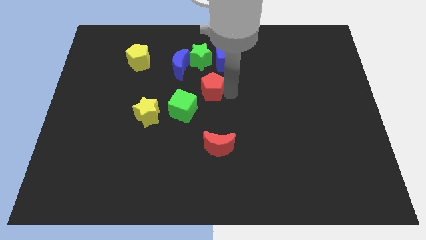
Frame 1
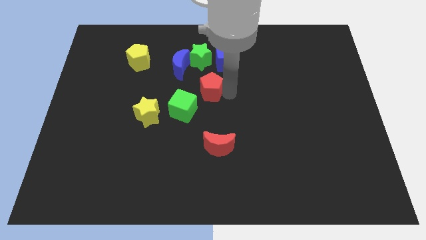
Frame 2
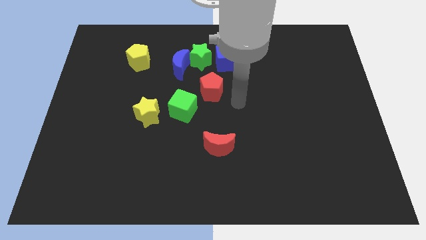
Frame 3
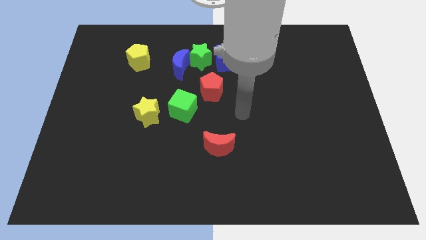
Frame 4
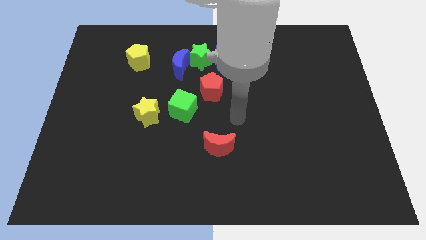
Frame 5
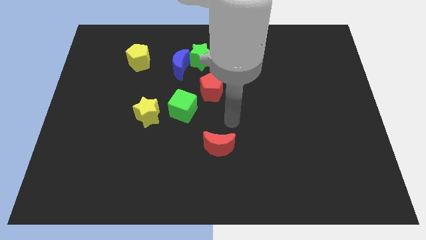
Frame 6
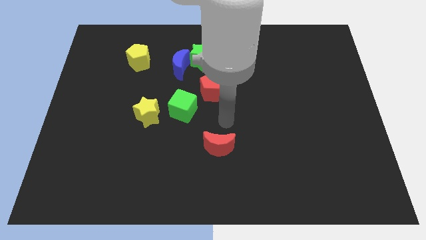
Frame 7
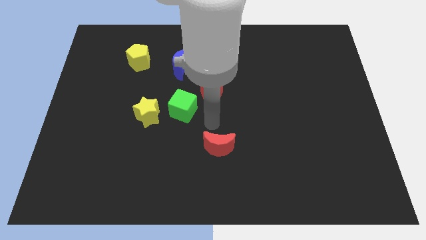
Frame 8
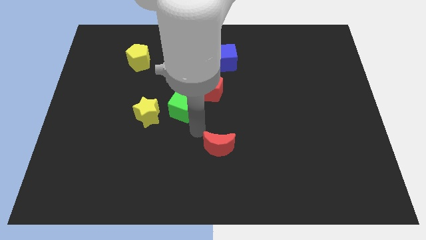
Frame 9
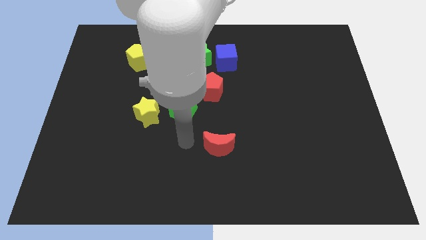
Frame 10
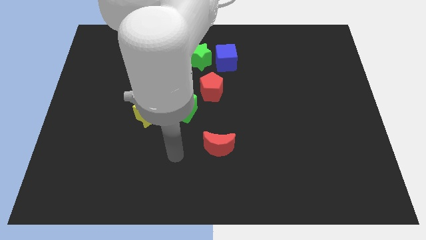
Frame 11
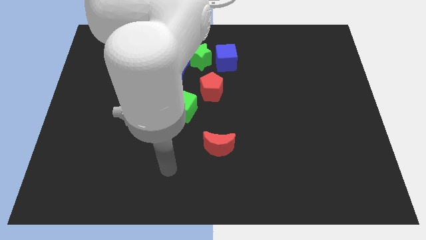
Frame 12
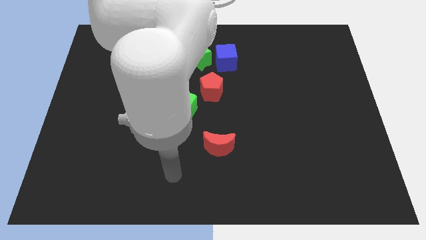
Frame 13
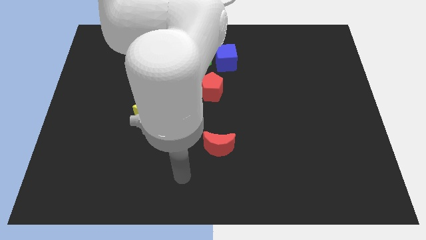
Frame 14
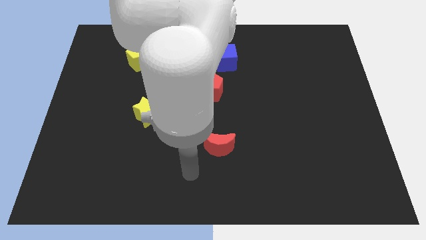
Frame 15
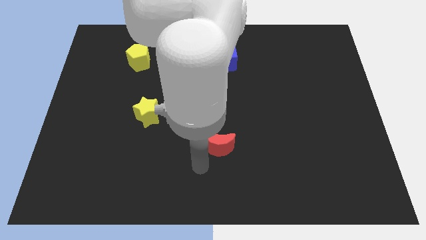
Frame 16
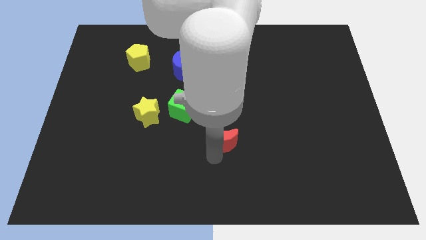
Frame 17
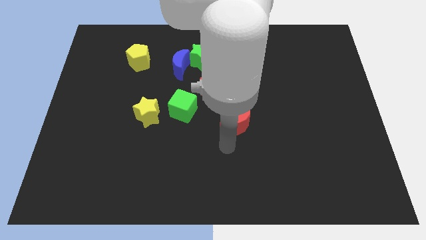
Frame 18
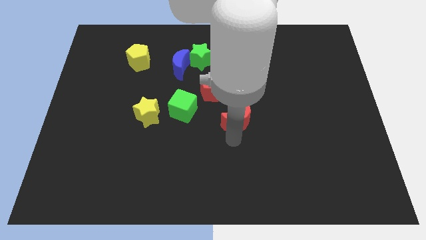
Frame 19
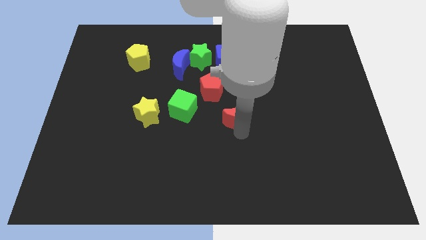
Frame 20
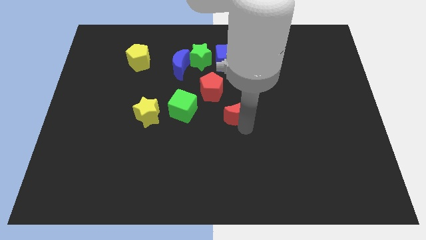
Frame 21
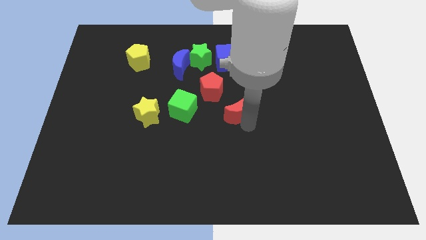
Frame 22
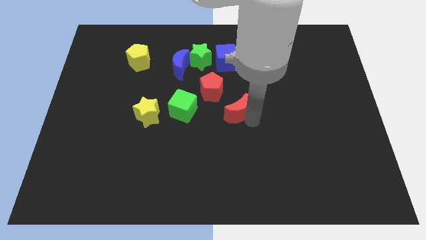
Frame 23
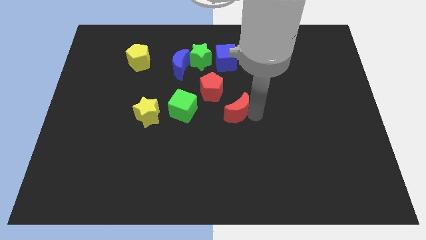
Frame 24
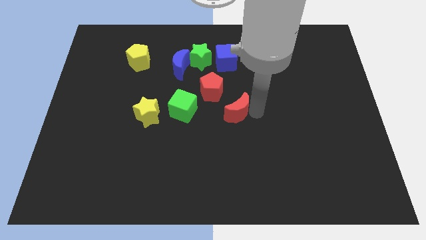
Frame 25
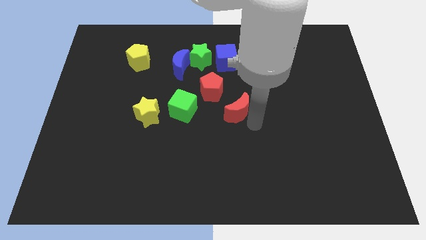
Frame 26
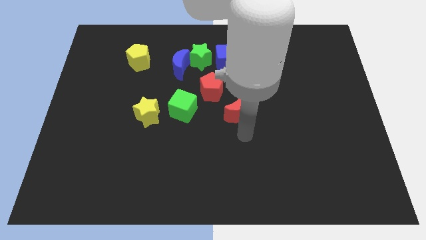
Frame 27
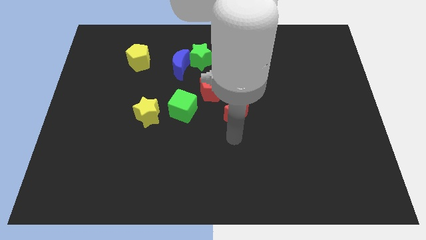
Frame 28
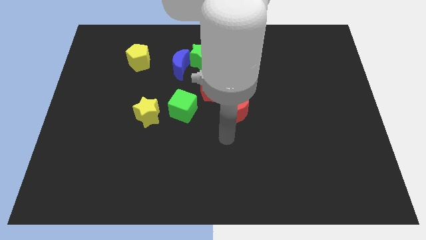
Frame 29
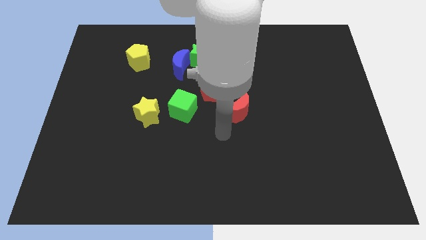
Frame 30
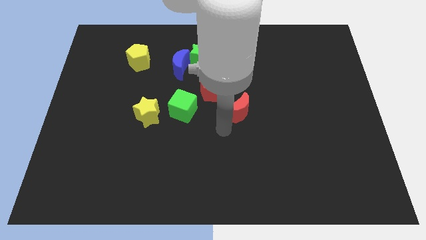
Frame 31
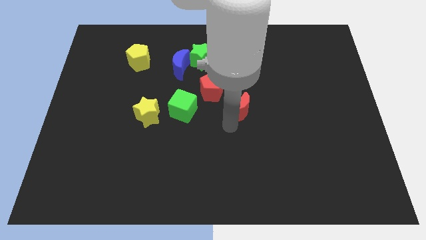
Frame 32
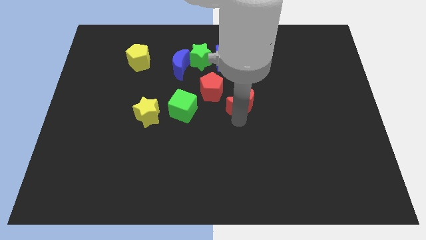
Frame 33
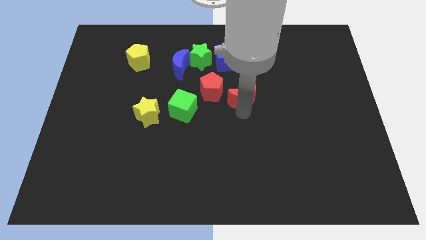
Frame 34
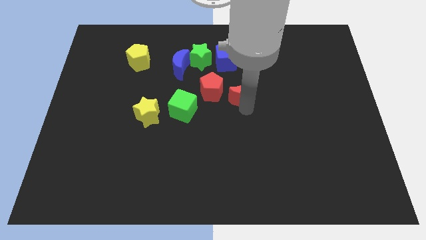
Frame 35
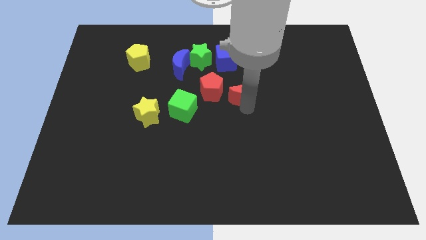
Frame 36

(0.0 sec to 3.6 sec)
place red moon beside red pentagon

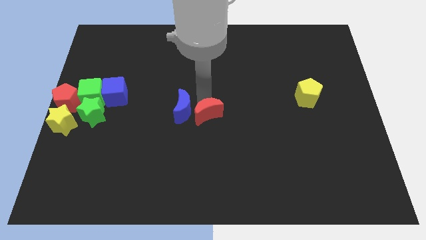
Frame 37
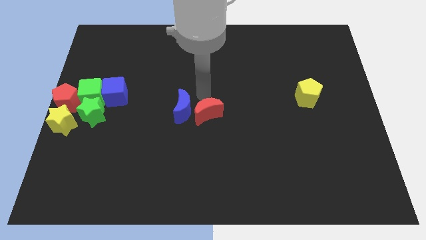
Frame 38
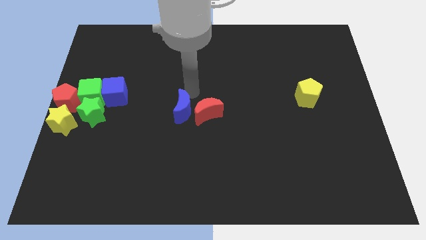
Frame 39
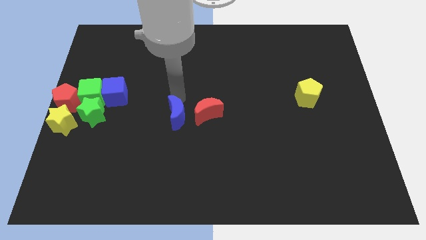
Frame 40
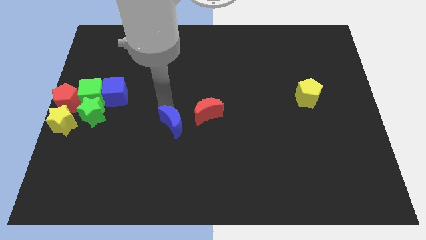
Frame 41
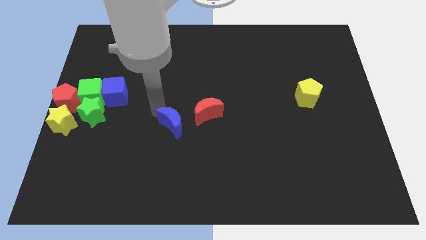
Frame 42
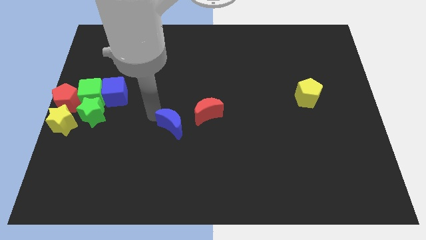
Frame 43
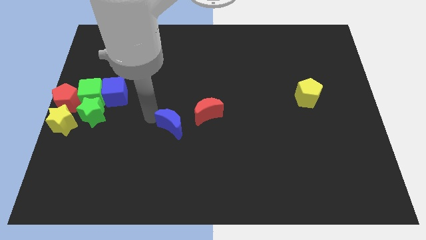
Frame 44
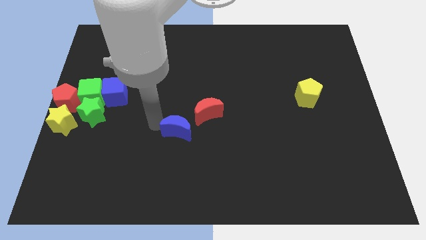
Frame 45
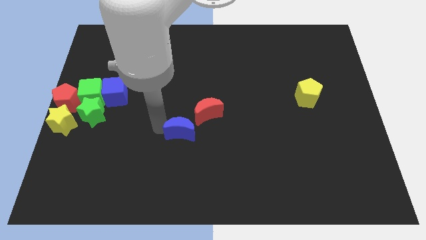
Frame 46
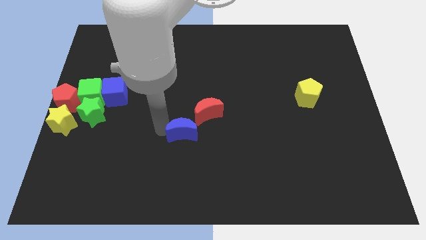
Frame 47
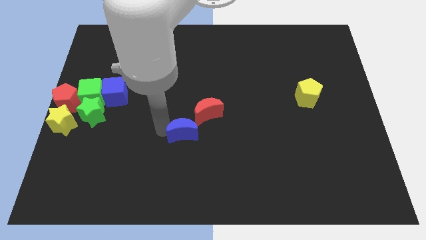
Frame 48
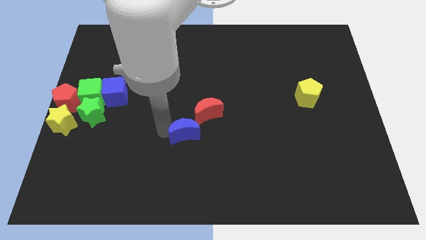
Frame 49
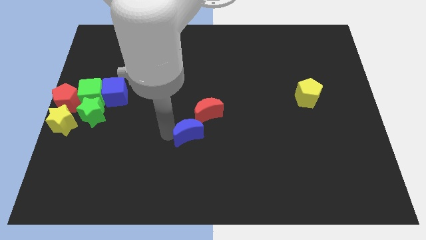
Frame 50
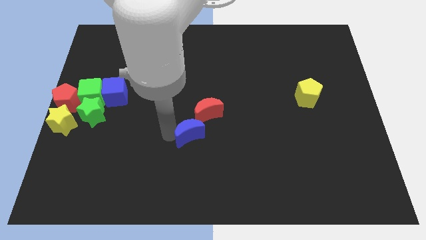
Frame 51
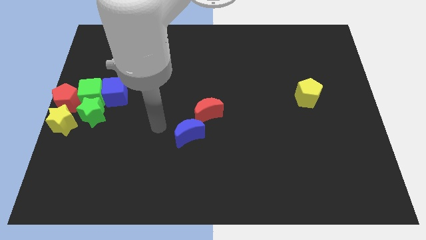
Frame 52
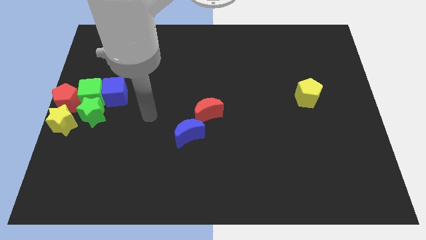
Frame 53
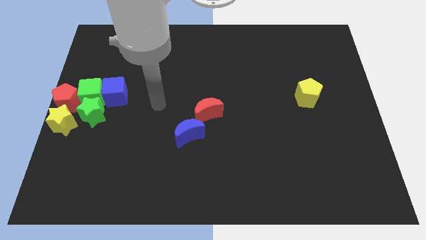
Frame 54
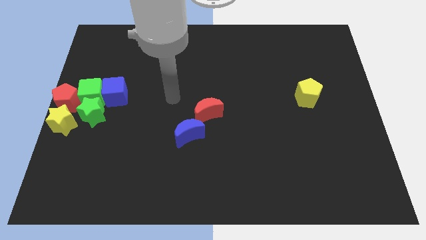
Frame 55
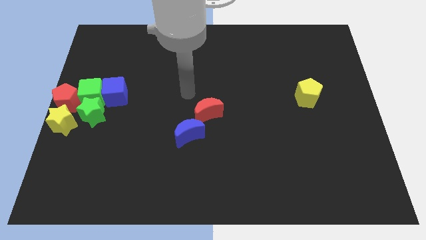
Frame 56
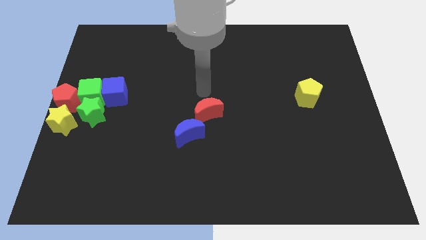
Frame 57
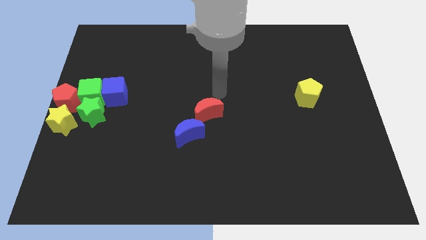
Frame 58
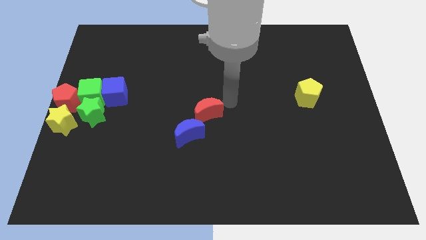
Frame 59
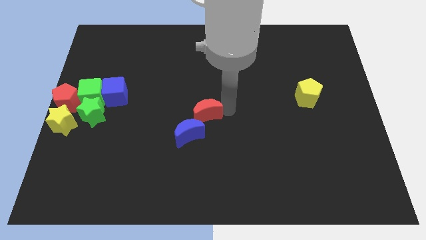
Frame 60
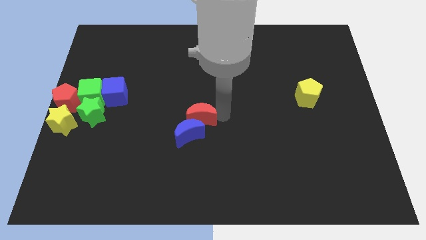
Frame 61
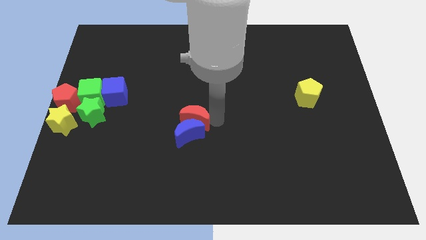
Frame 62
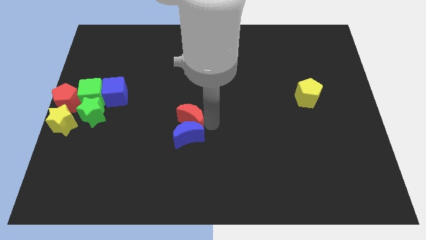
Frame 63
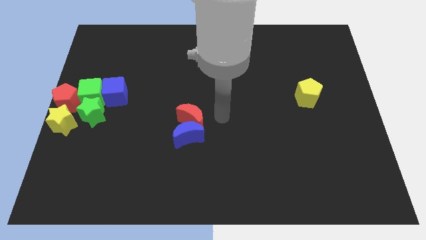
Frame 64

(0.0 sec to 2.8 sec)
move red moon to the top of blue crescent

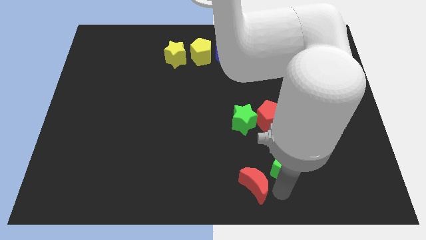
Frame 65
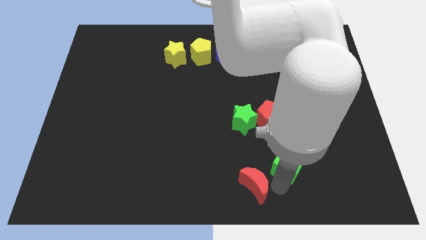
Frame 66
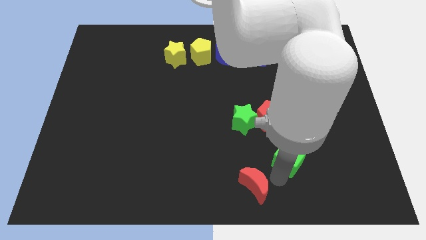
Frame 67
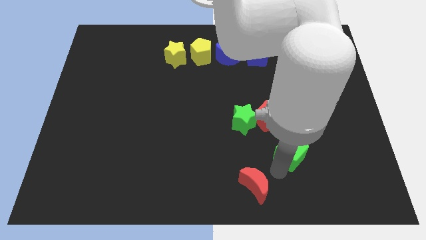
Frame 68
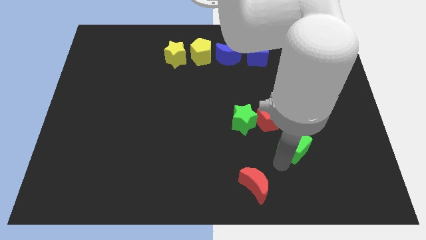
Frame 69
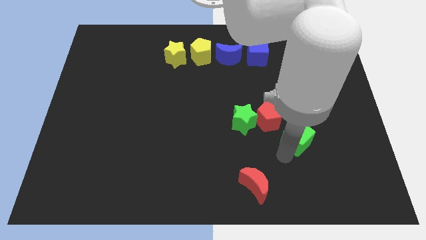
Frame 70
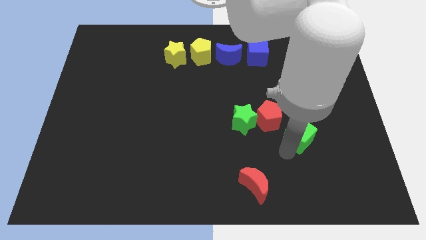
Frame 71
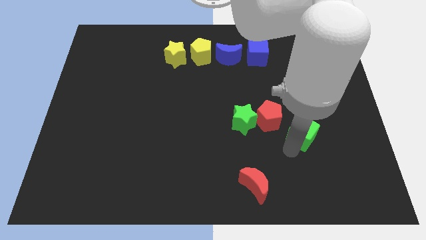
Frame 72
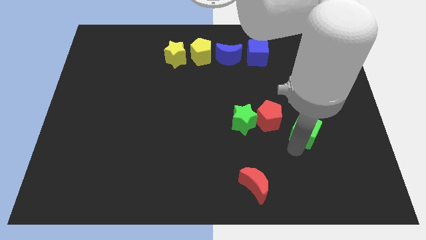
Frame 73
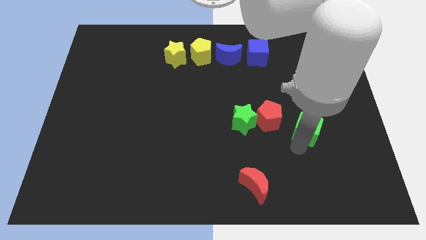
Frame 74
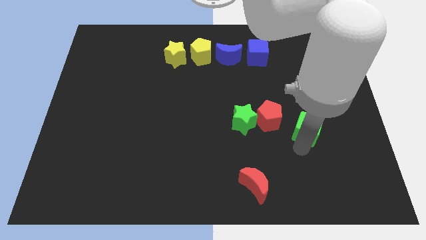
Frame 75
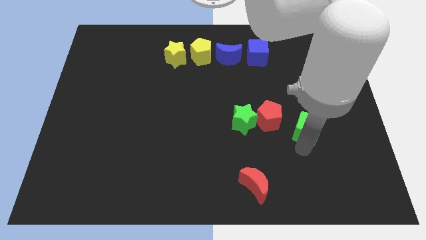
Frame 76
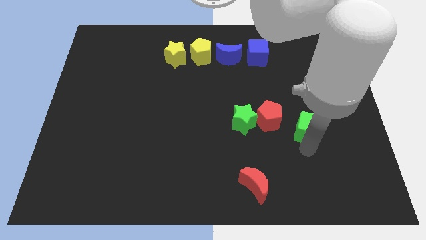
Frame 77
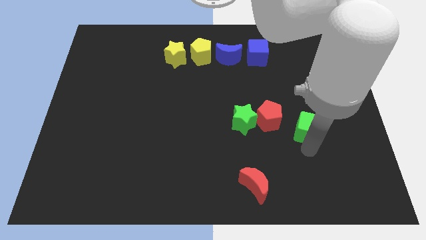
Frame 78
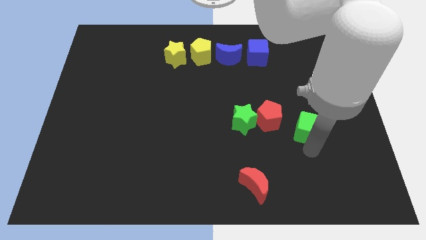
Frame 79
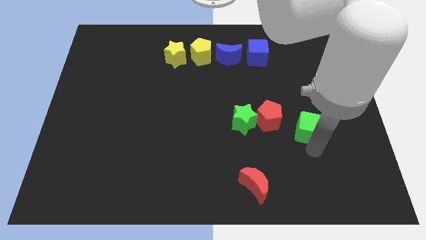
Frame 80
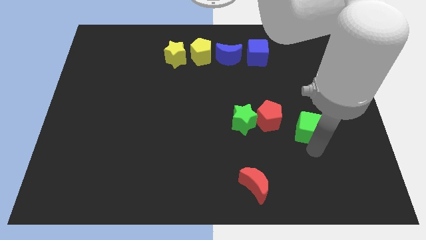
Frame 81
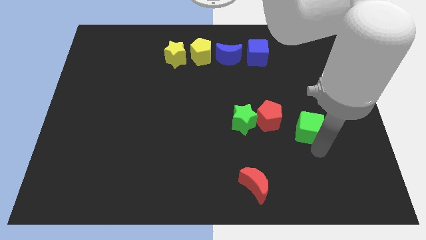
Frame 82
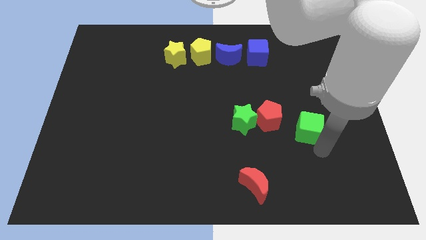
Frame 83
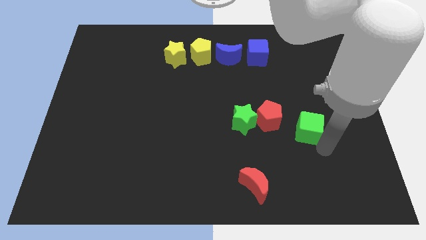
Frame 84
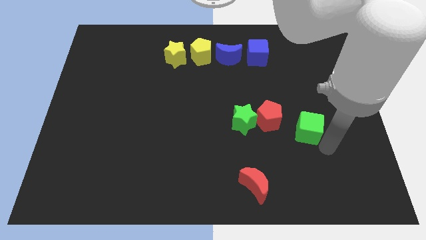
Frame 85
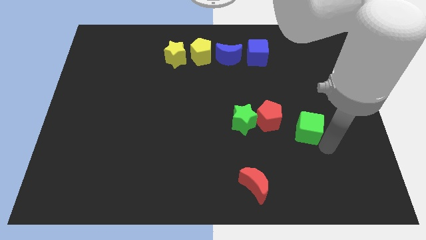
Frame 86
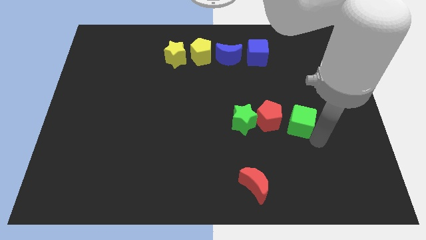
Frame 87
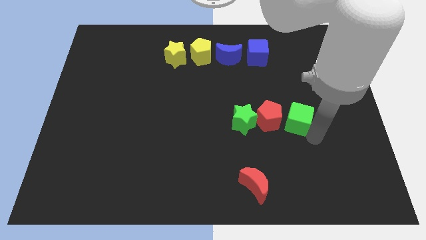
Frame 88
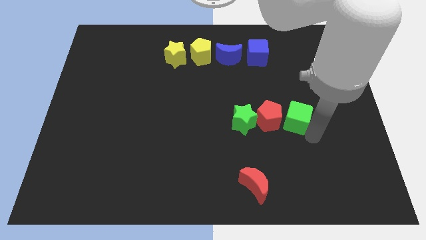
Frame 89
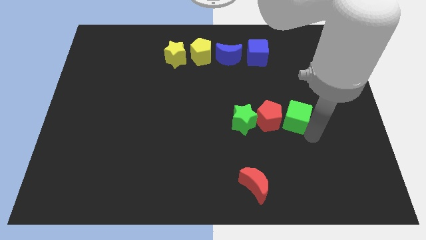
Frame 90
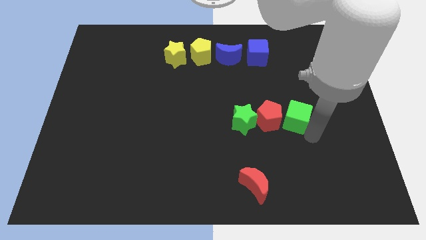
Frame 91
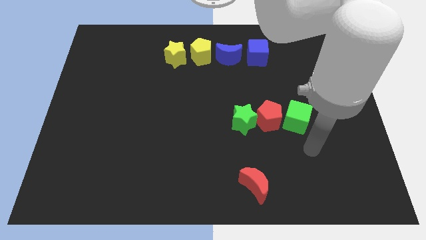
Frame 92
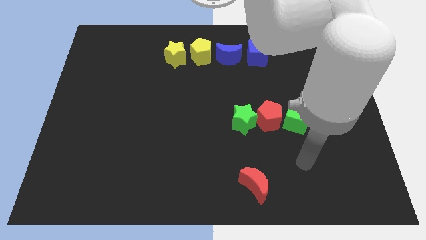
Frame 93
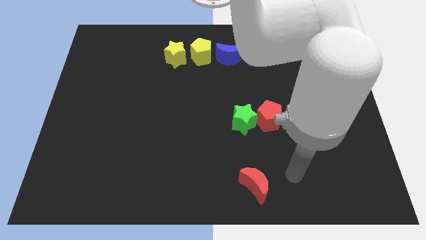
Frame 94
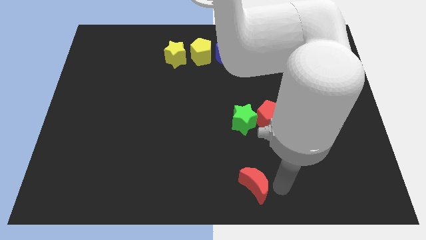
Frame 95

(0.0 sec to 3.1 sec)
slide green cube to the bottom of red pentagon
